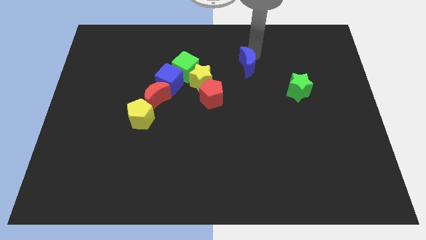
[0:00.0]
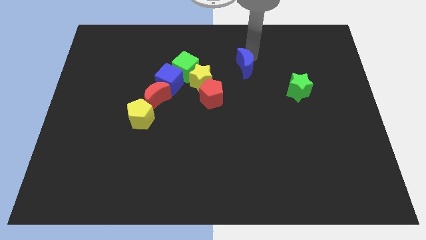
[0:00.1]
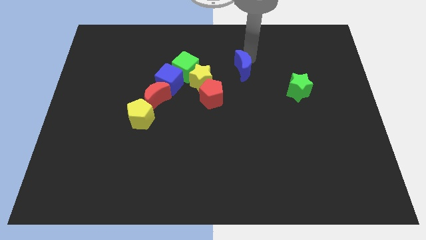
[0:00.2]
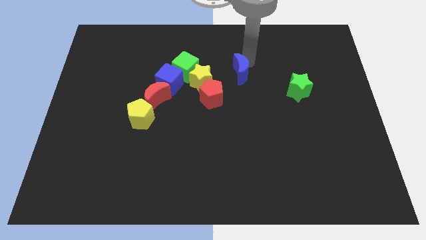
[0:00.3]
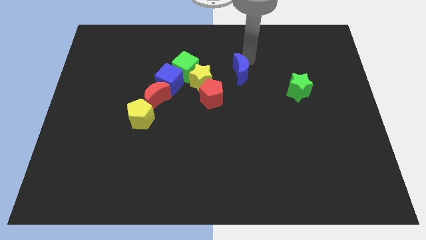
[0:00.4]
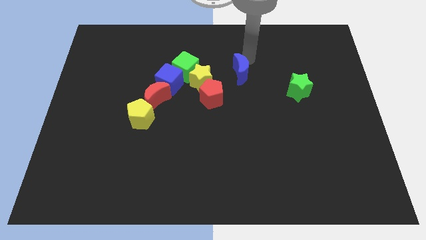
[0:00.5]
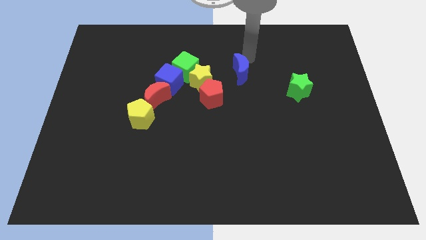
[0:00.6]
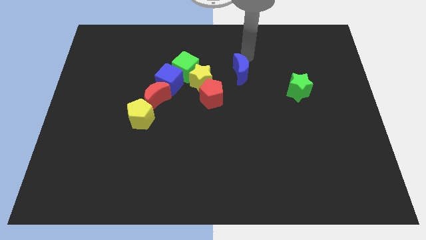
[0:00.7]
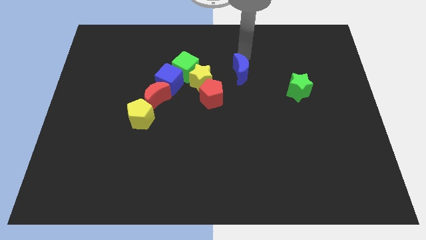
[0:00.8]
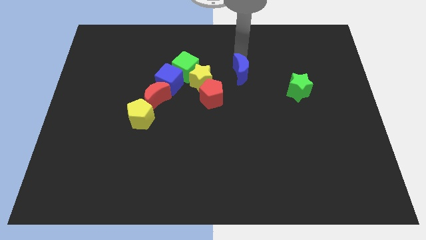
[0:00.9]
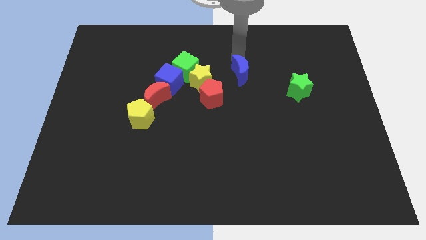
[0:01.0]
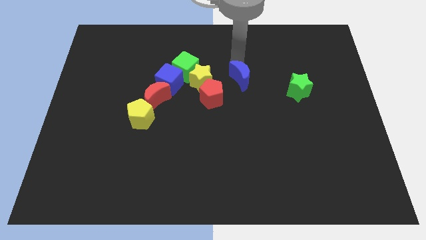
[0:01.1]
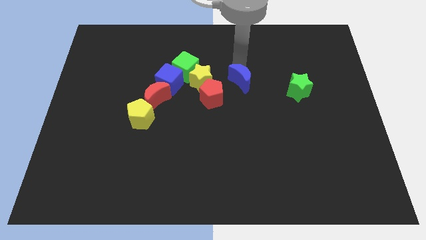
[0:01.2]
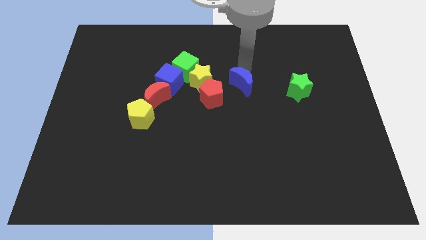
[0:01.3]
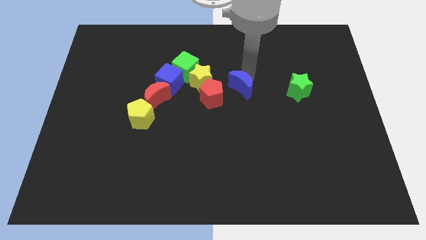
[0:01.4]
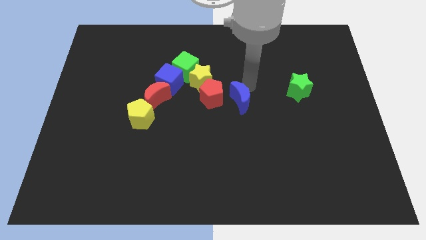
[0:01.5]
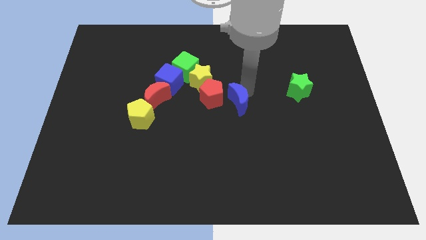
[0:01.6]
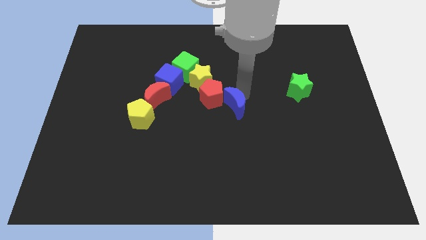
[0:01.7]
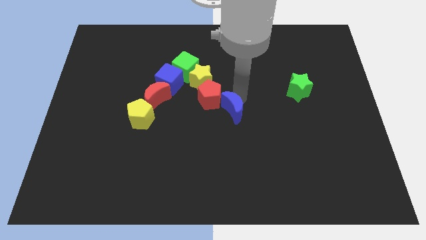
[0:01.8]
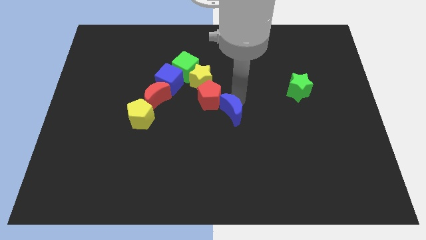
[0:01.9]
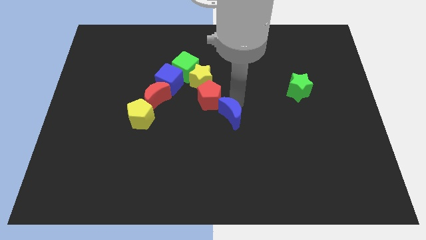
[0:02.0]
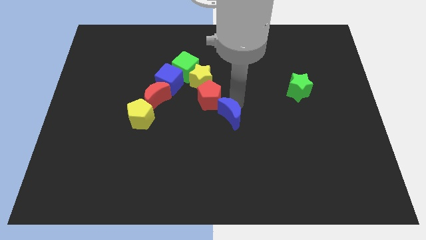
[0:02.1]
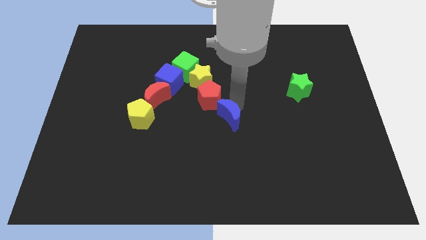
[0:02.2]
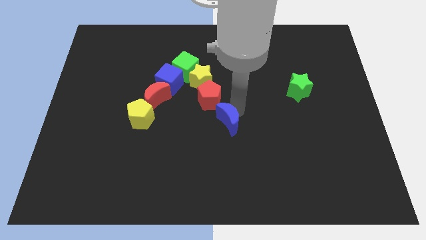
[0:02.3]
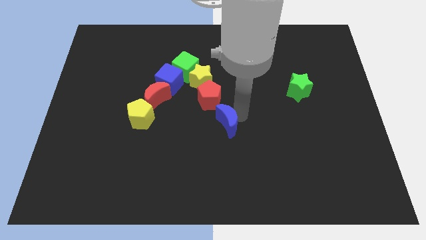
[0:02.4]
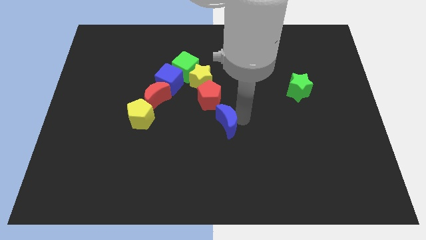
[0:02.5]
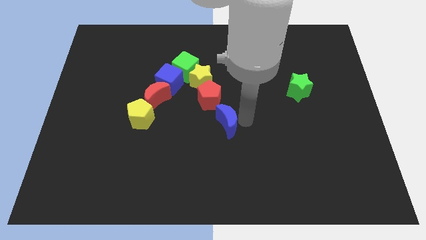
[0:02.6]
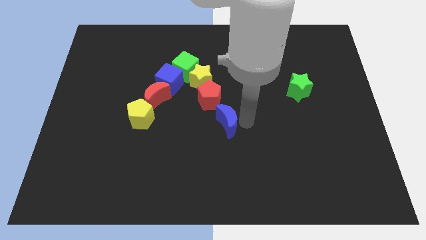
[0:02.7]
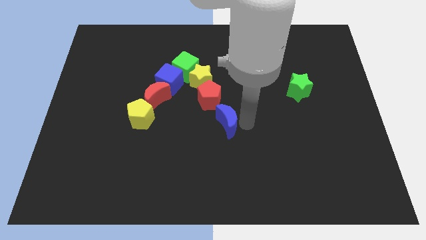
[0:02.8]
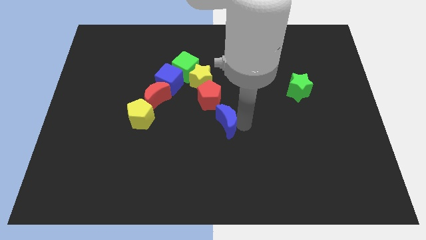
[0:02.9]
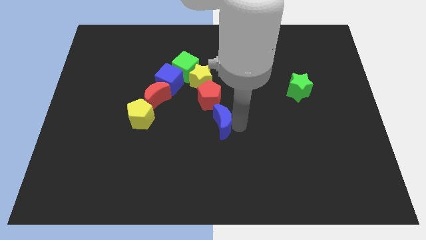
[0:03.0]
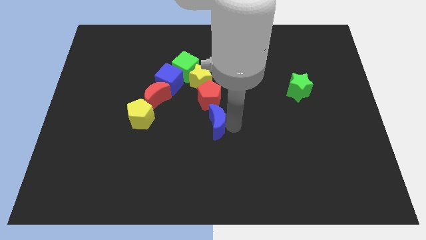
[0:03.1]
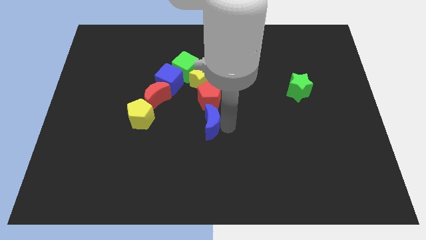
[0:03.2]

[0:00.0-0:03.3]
move the blue crescent bottom of the red pentagon

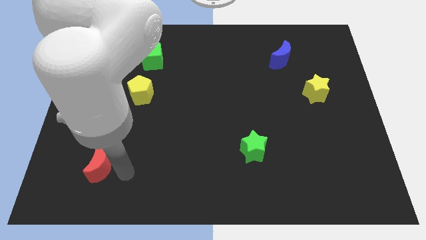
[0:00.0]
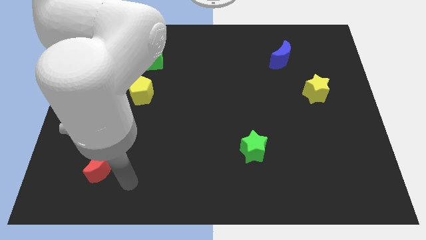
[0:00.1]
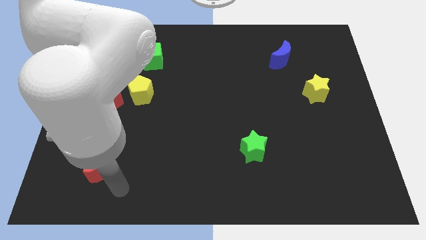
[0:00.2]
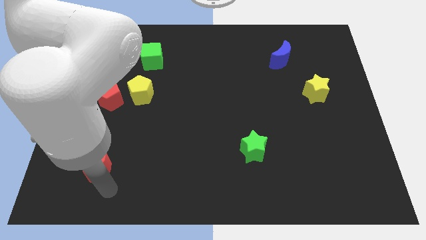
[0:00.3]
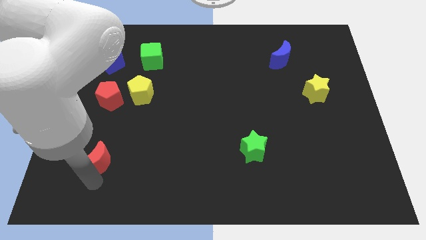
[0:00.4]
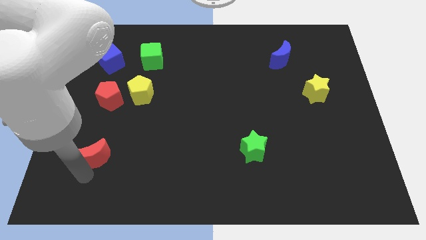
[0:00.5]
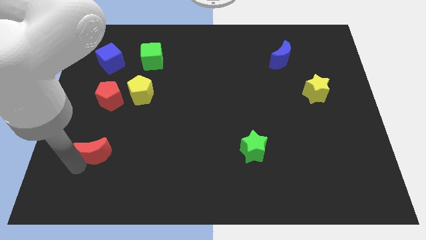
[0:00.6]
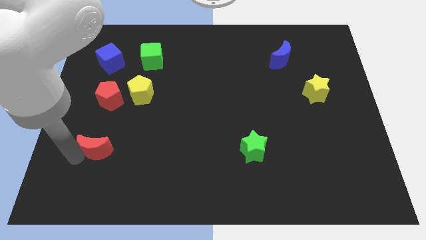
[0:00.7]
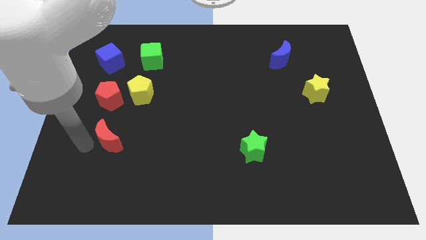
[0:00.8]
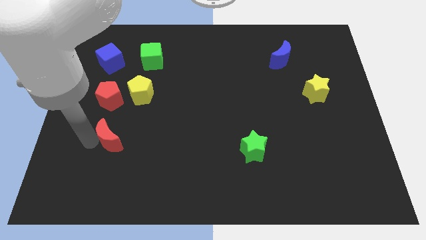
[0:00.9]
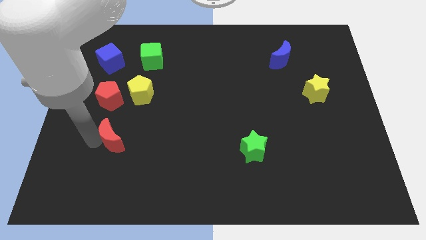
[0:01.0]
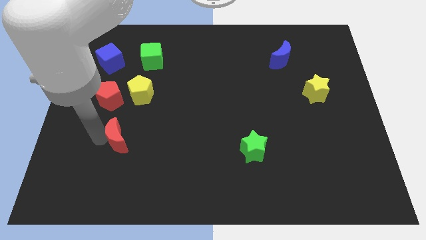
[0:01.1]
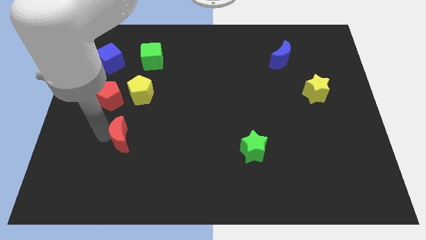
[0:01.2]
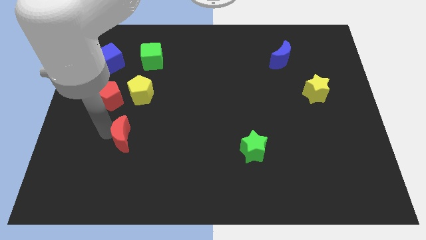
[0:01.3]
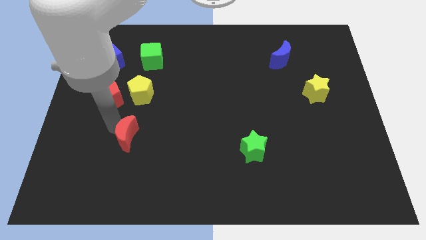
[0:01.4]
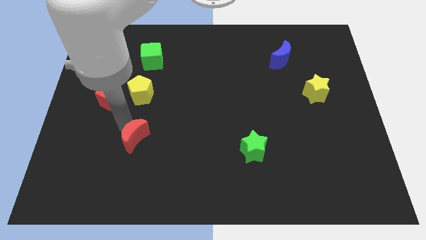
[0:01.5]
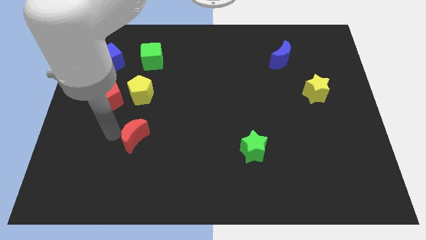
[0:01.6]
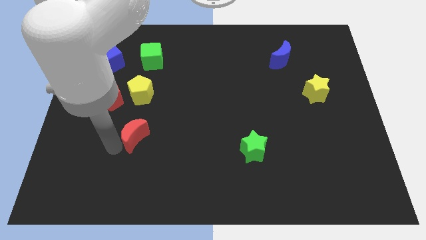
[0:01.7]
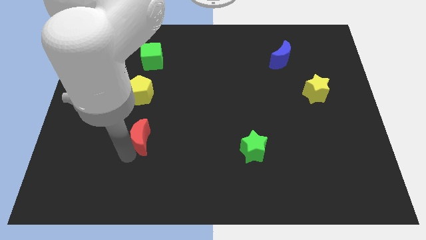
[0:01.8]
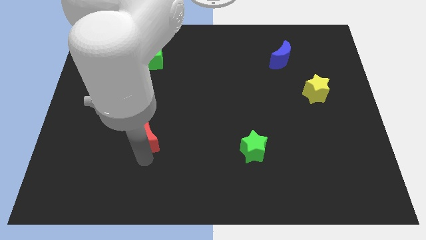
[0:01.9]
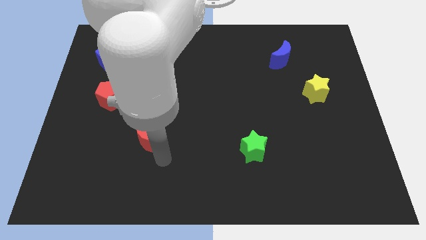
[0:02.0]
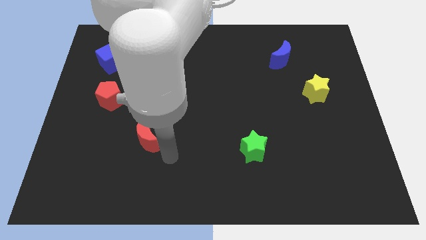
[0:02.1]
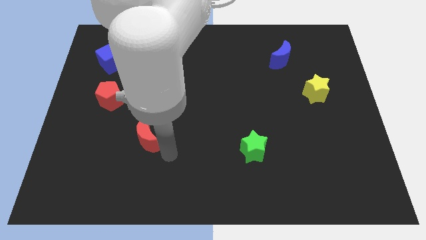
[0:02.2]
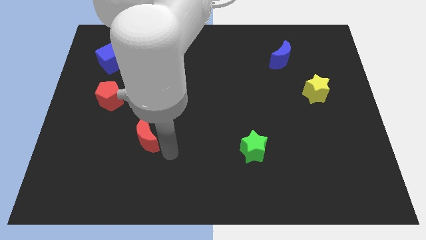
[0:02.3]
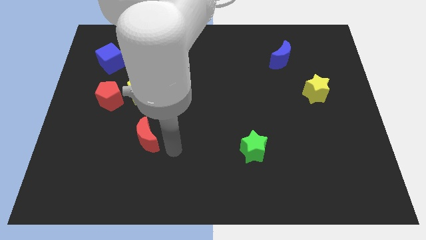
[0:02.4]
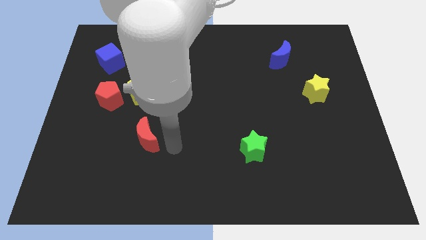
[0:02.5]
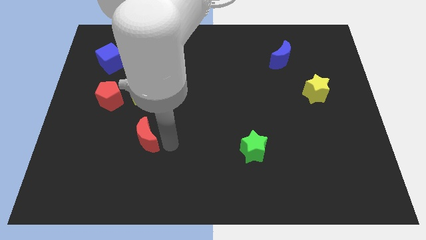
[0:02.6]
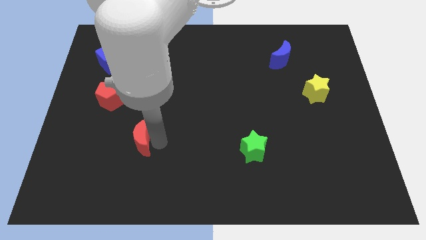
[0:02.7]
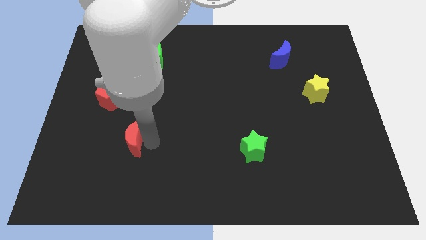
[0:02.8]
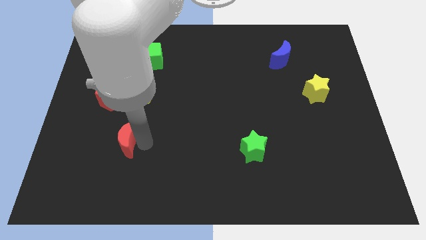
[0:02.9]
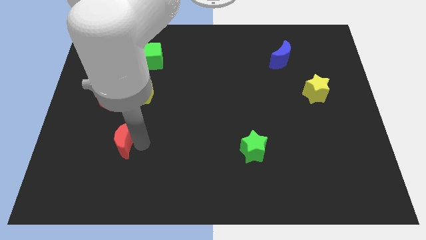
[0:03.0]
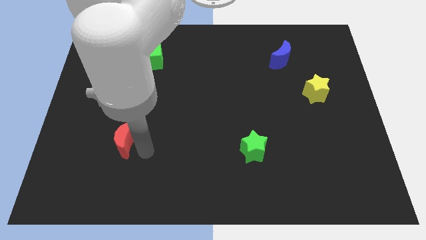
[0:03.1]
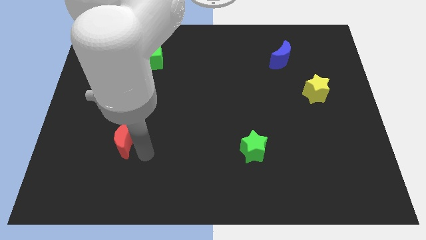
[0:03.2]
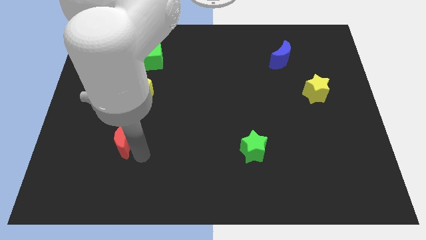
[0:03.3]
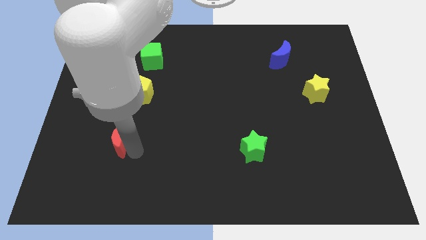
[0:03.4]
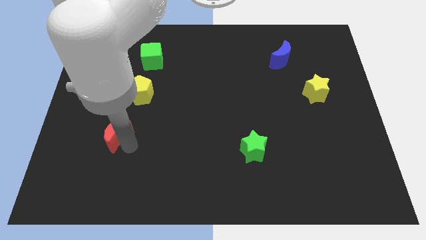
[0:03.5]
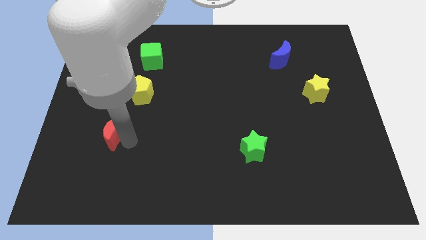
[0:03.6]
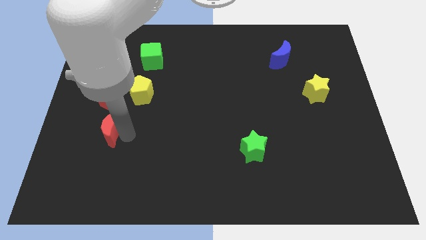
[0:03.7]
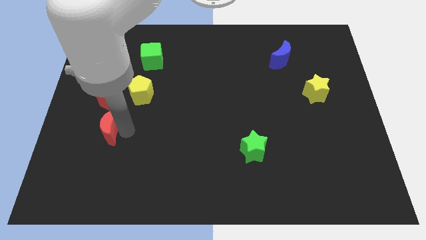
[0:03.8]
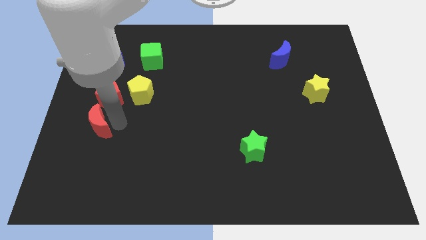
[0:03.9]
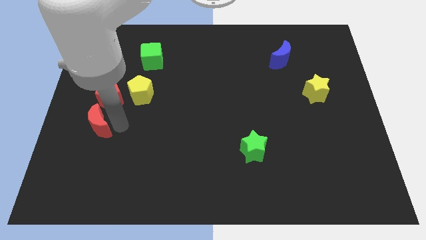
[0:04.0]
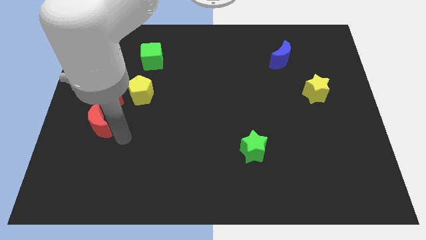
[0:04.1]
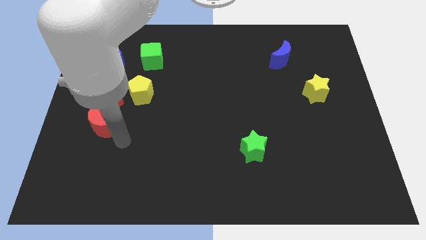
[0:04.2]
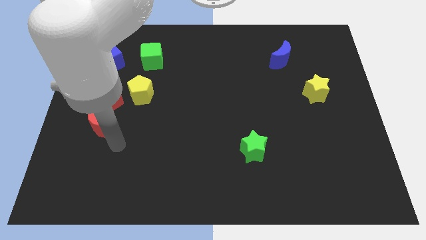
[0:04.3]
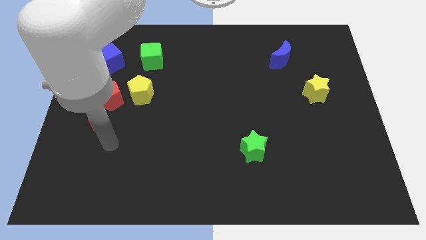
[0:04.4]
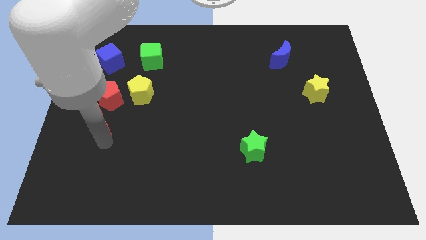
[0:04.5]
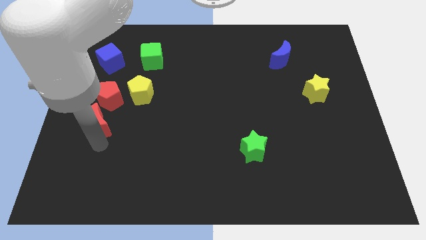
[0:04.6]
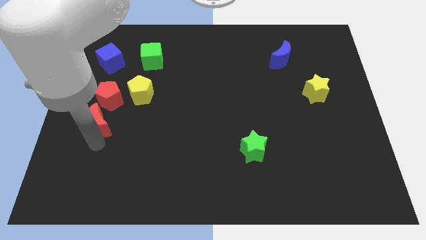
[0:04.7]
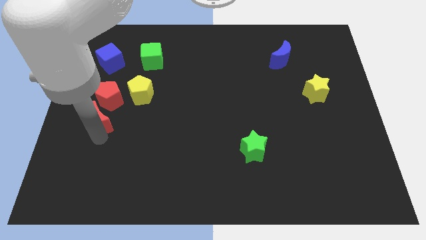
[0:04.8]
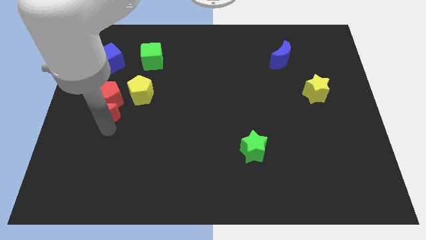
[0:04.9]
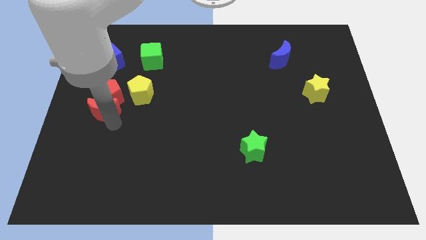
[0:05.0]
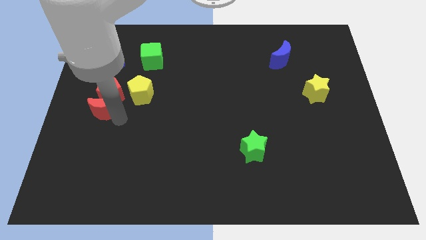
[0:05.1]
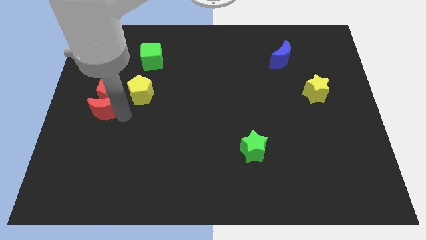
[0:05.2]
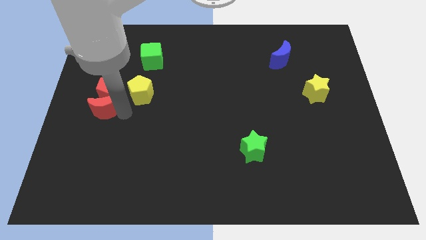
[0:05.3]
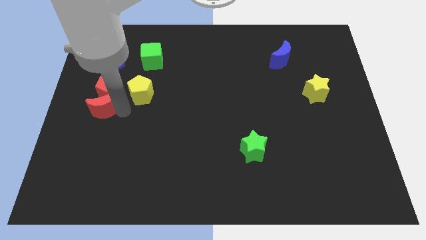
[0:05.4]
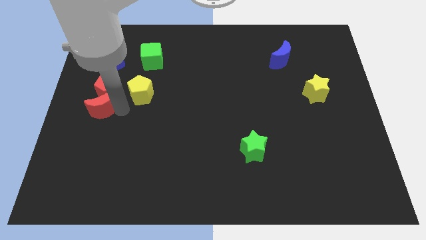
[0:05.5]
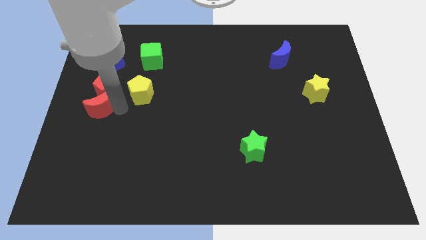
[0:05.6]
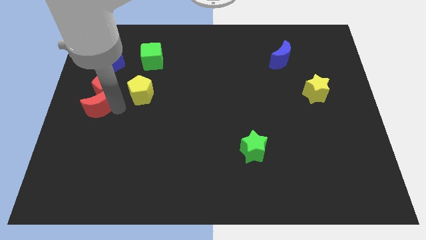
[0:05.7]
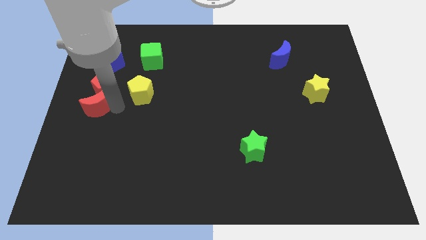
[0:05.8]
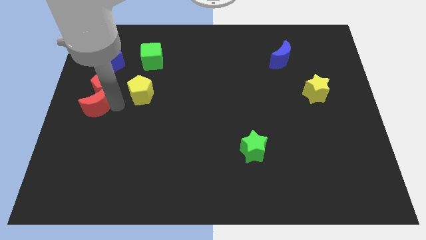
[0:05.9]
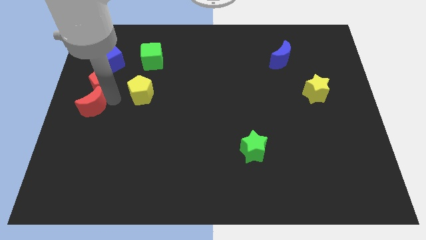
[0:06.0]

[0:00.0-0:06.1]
place the red moon below the red pentagon
